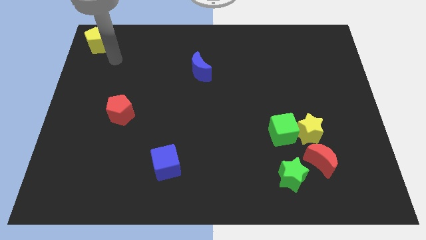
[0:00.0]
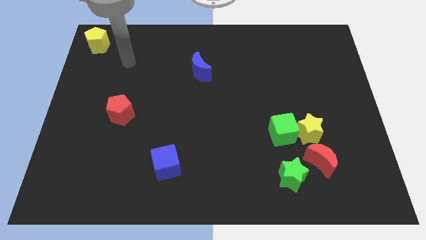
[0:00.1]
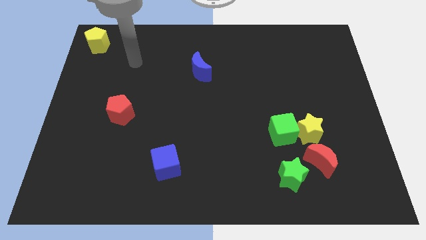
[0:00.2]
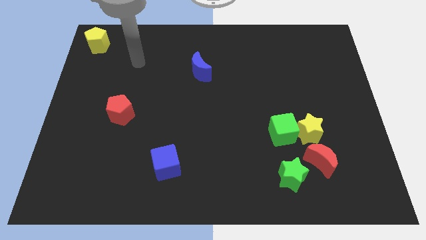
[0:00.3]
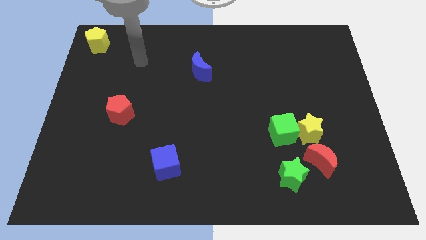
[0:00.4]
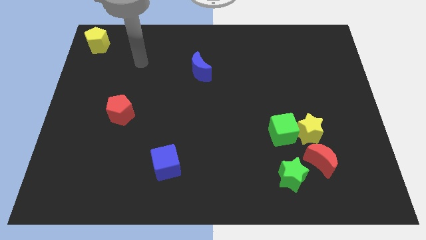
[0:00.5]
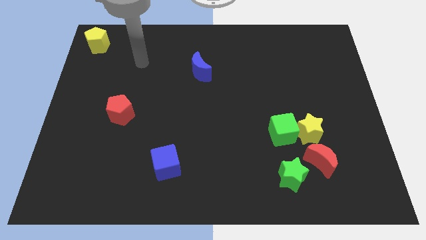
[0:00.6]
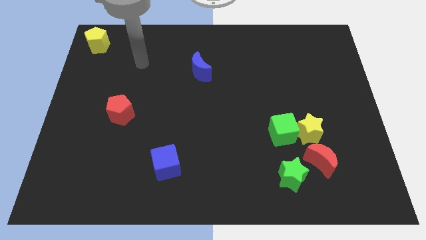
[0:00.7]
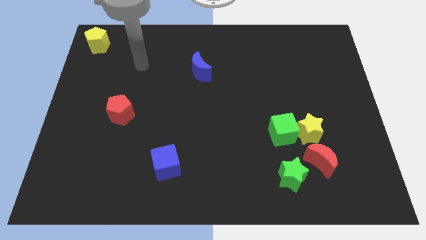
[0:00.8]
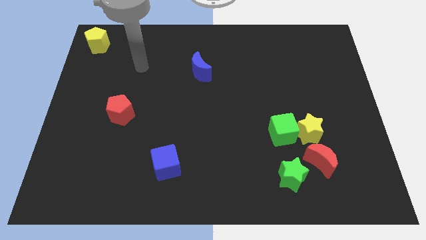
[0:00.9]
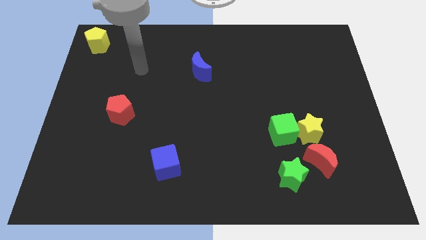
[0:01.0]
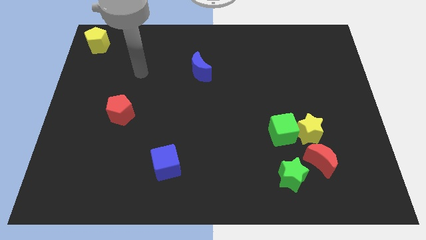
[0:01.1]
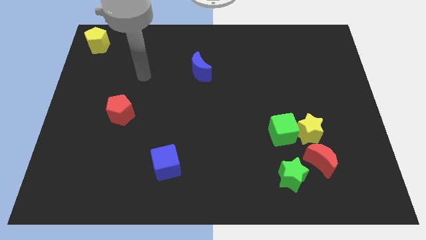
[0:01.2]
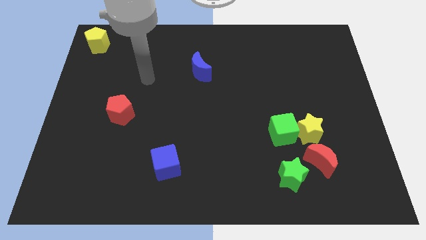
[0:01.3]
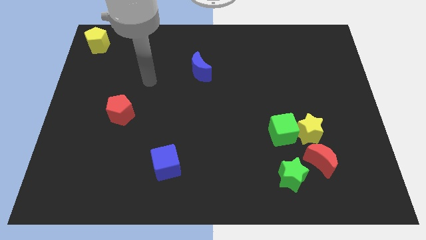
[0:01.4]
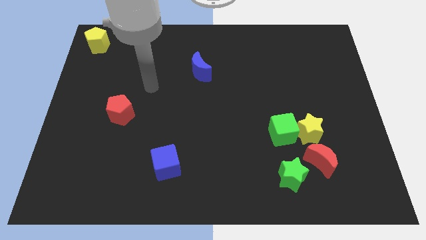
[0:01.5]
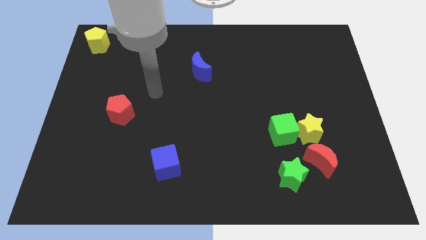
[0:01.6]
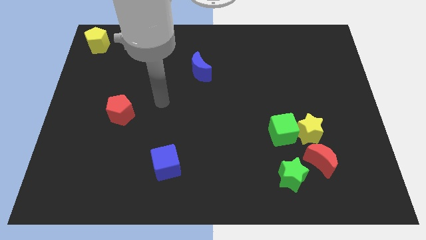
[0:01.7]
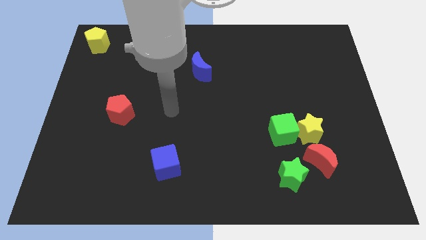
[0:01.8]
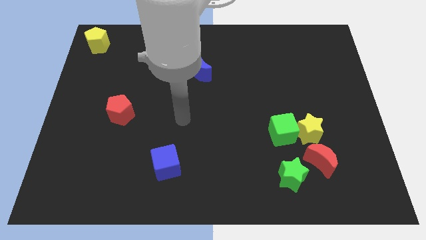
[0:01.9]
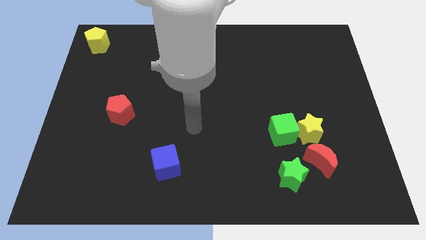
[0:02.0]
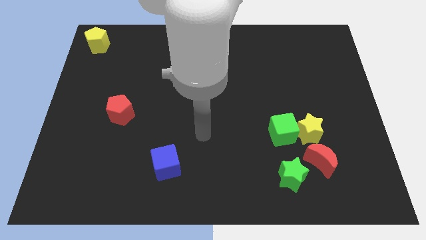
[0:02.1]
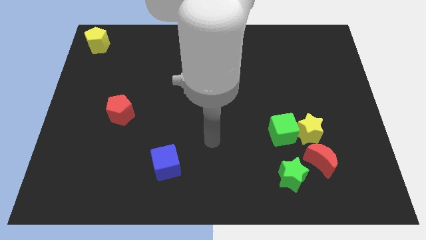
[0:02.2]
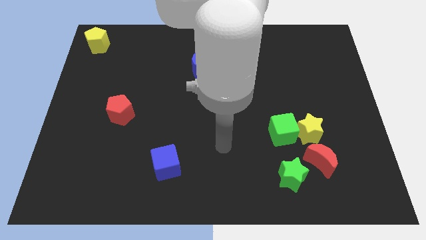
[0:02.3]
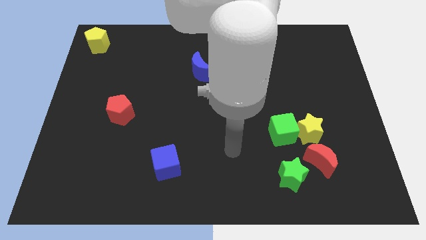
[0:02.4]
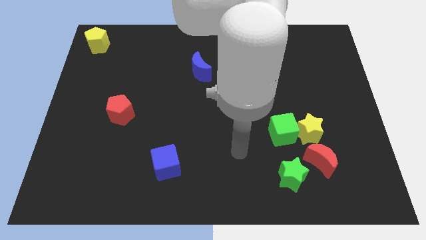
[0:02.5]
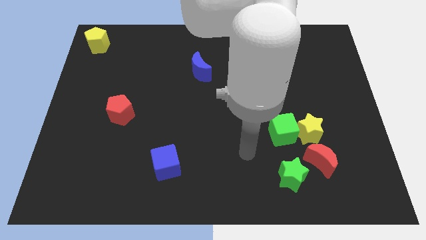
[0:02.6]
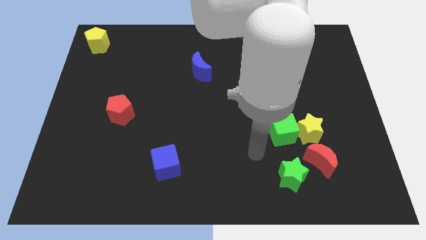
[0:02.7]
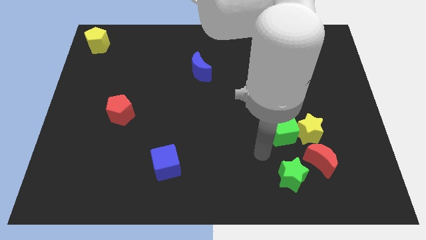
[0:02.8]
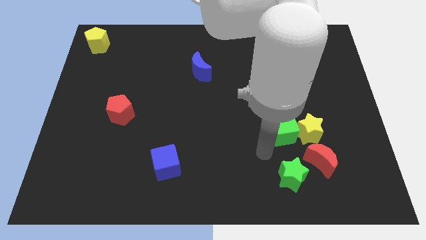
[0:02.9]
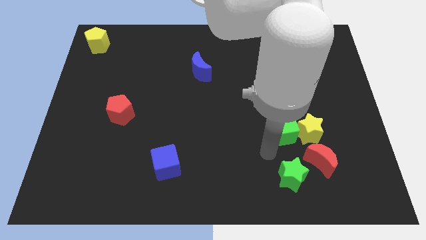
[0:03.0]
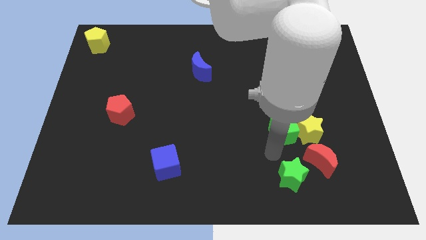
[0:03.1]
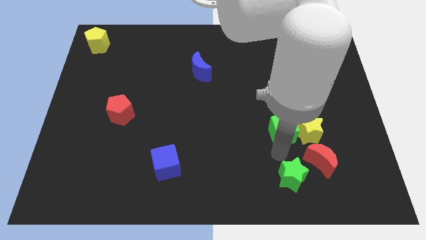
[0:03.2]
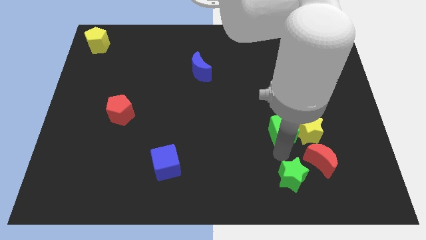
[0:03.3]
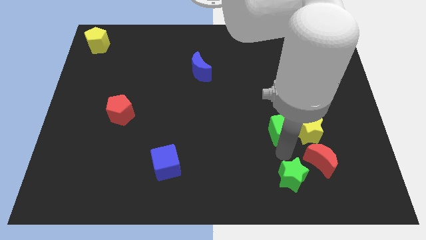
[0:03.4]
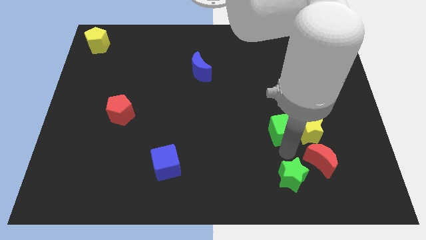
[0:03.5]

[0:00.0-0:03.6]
move your arm away from the yellow pentagon

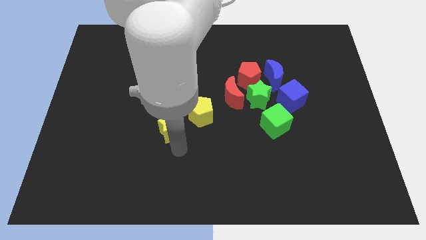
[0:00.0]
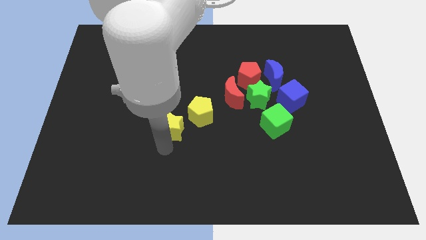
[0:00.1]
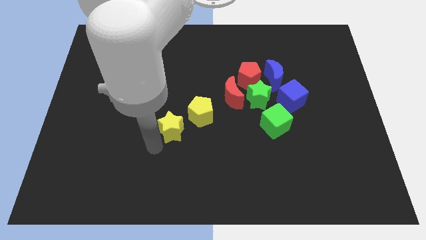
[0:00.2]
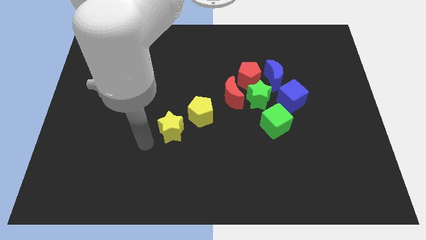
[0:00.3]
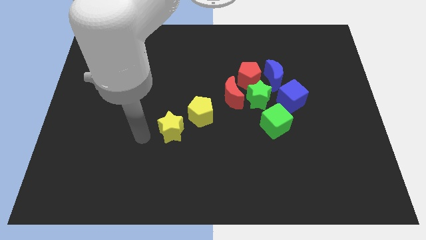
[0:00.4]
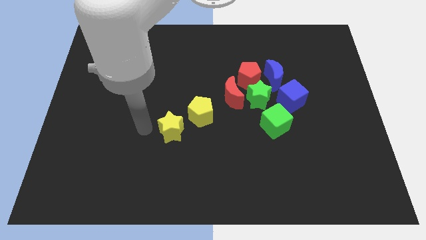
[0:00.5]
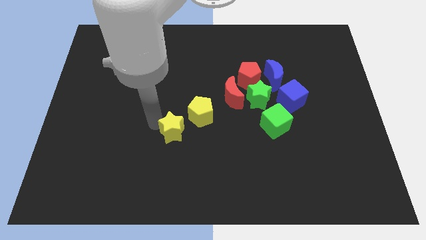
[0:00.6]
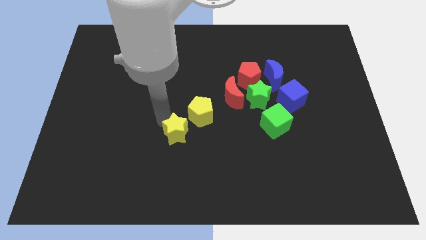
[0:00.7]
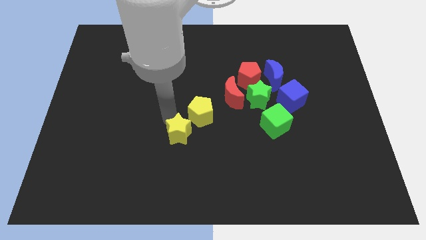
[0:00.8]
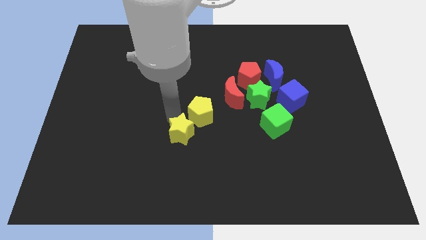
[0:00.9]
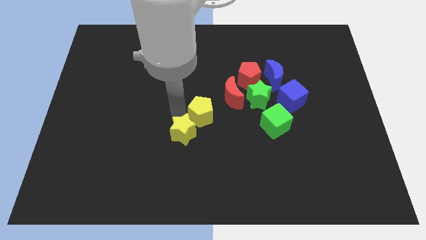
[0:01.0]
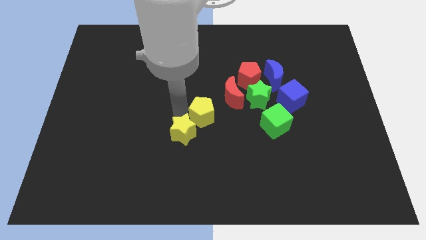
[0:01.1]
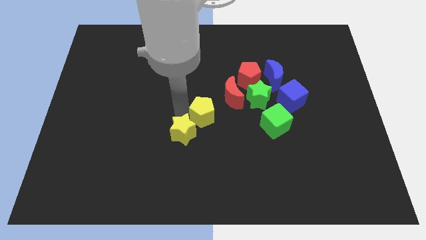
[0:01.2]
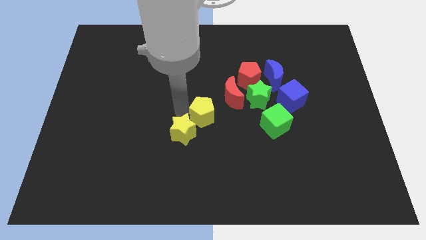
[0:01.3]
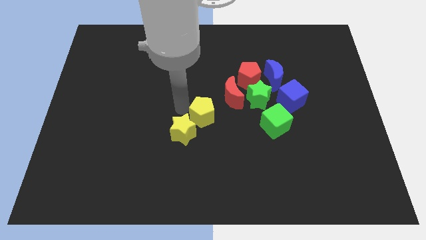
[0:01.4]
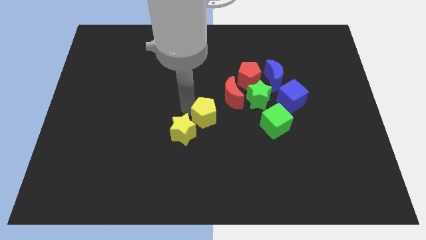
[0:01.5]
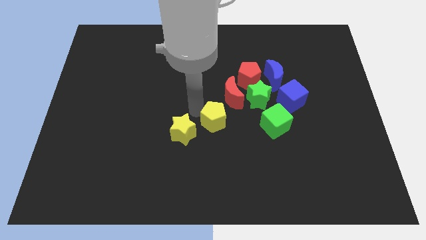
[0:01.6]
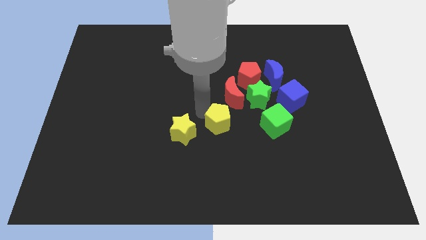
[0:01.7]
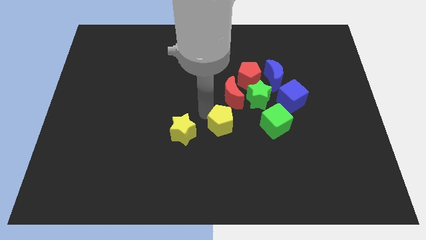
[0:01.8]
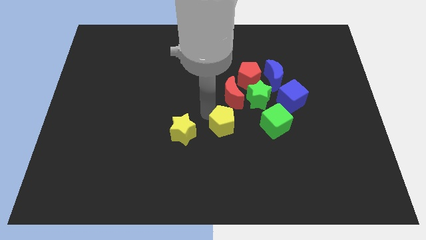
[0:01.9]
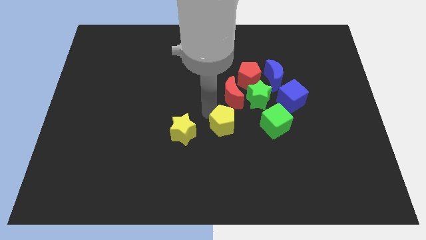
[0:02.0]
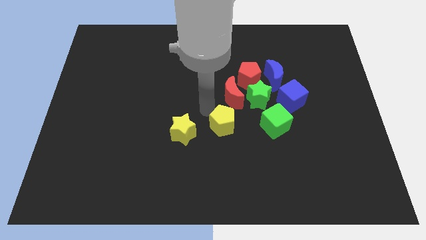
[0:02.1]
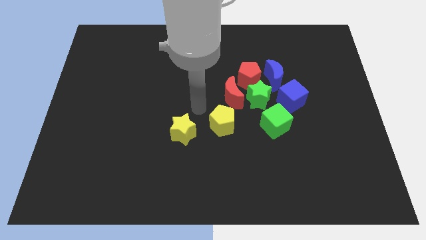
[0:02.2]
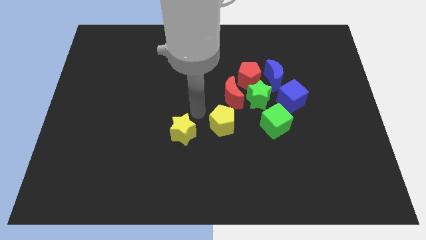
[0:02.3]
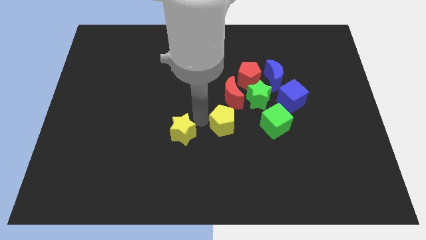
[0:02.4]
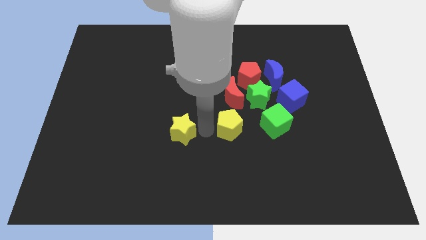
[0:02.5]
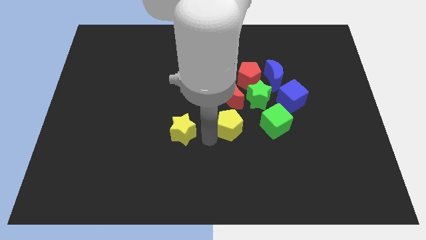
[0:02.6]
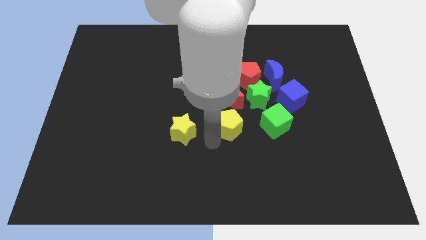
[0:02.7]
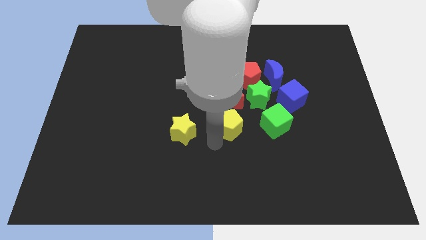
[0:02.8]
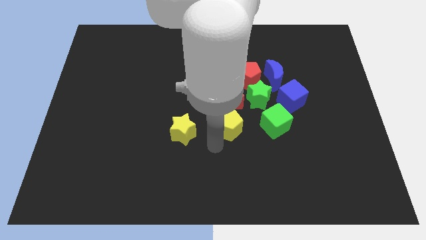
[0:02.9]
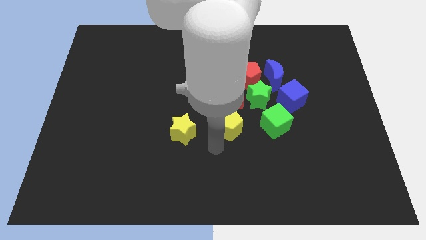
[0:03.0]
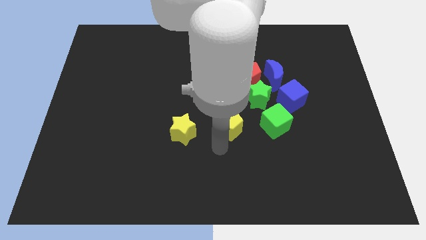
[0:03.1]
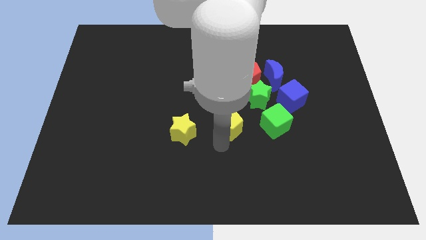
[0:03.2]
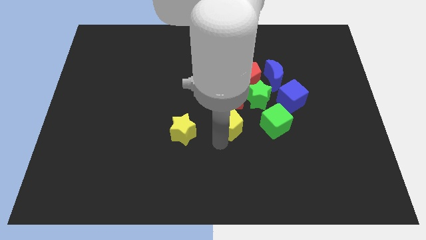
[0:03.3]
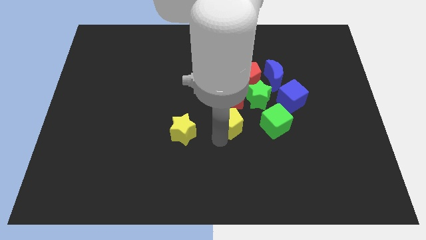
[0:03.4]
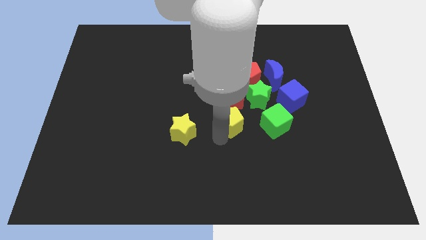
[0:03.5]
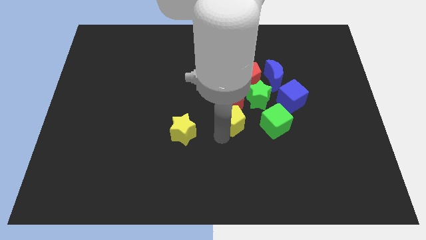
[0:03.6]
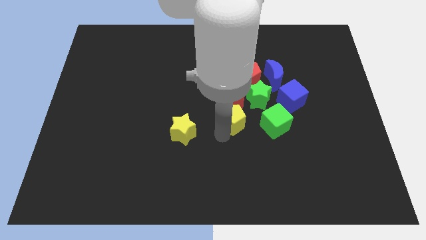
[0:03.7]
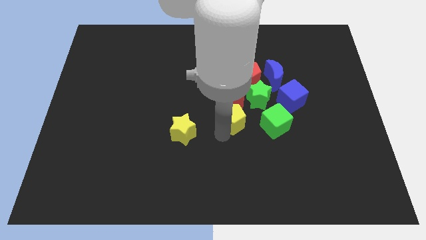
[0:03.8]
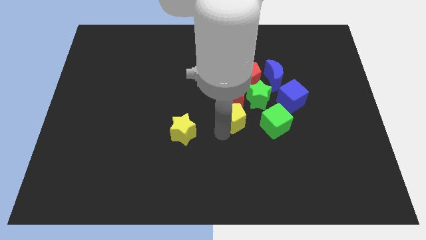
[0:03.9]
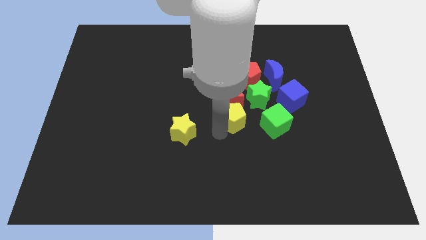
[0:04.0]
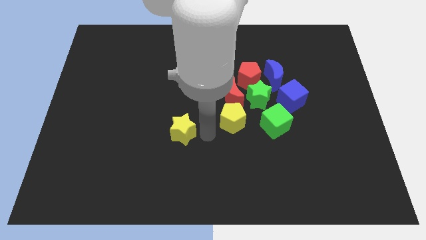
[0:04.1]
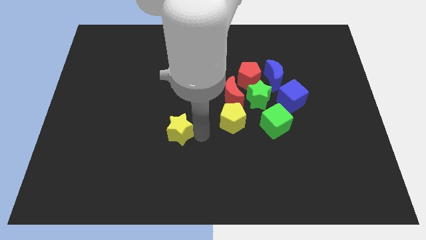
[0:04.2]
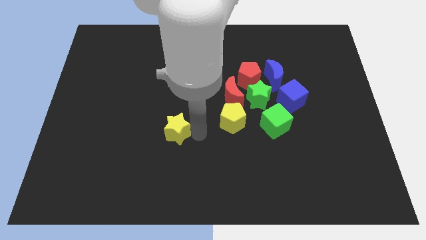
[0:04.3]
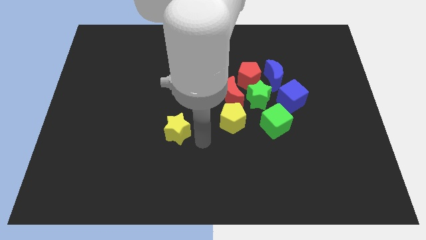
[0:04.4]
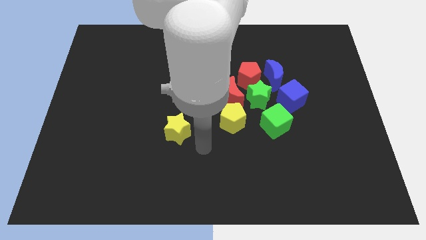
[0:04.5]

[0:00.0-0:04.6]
place the yellow pentagon down to the red crescent

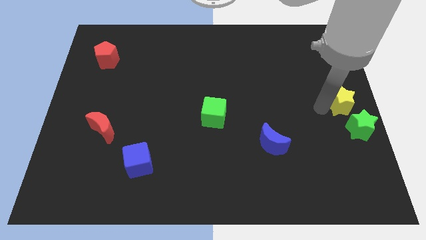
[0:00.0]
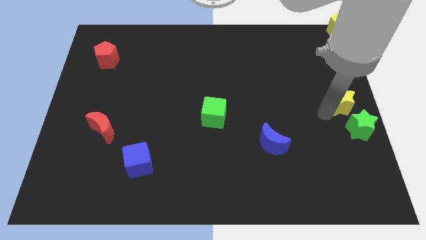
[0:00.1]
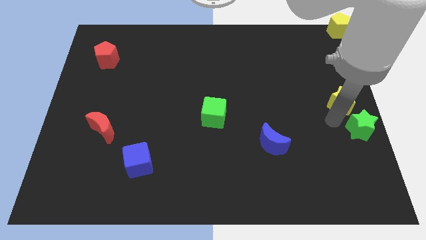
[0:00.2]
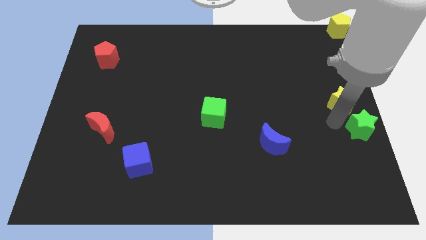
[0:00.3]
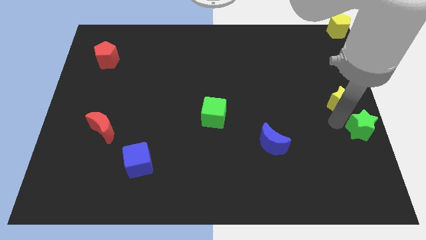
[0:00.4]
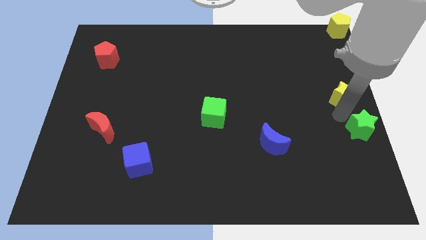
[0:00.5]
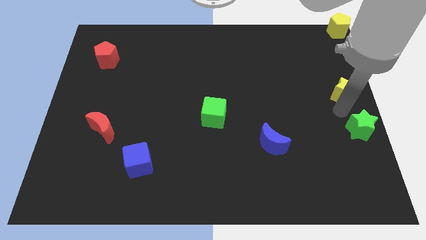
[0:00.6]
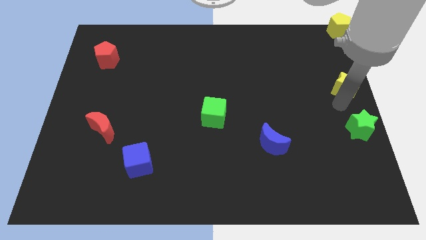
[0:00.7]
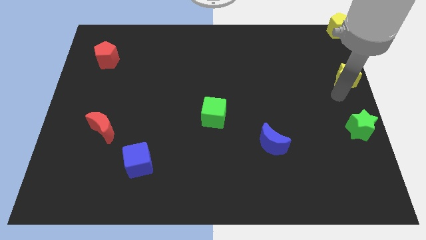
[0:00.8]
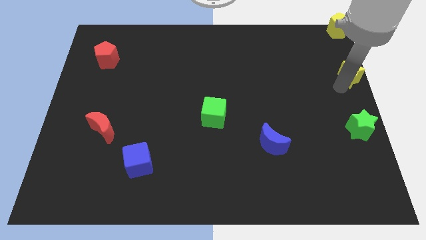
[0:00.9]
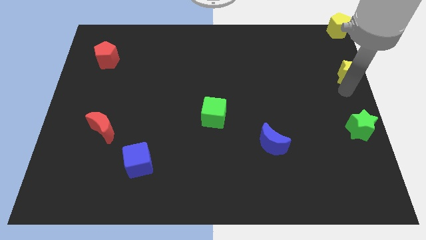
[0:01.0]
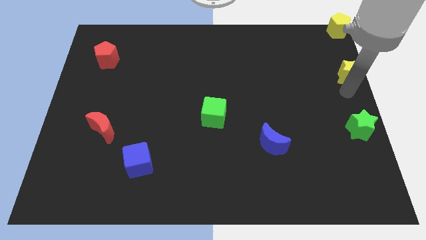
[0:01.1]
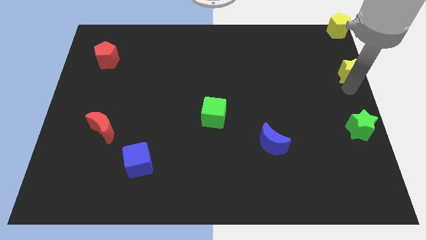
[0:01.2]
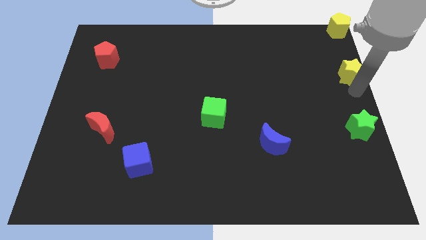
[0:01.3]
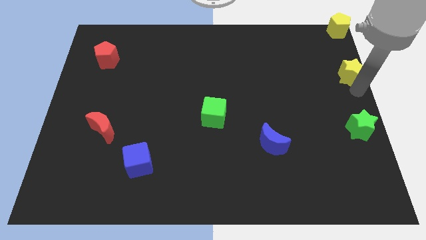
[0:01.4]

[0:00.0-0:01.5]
place the yellow star vertically towards green star
